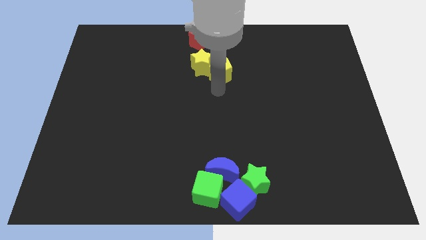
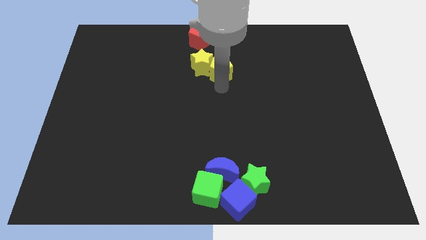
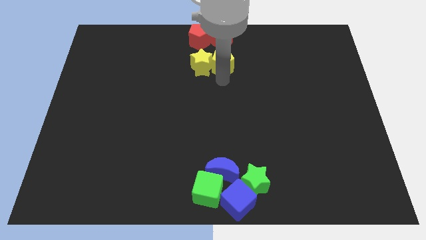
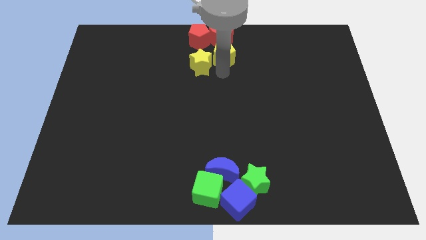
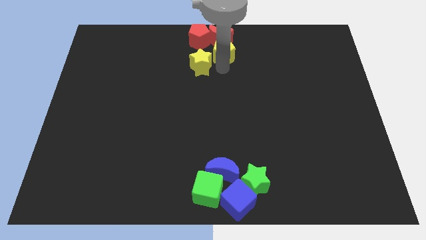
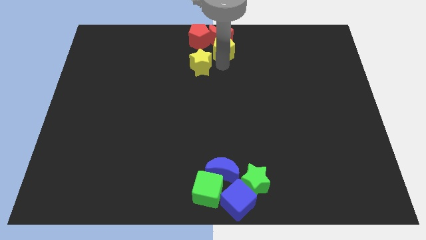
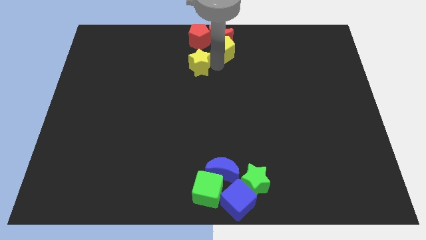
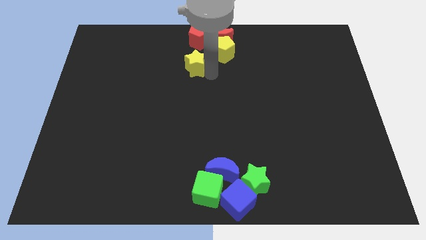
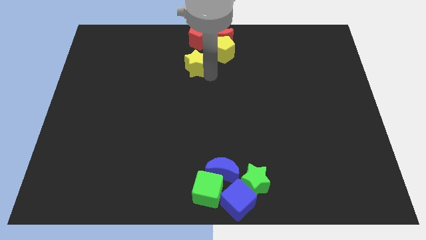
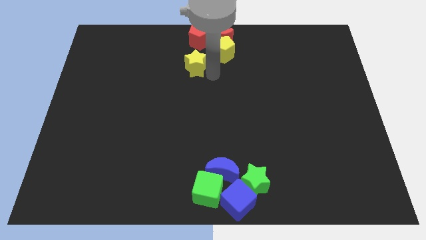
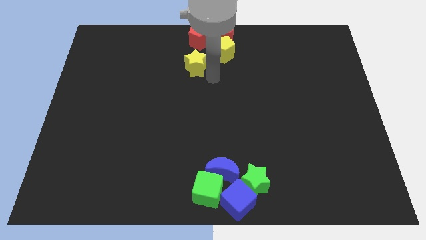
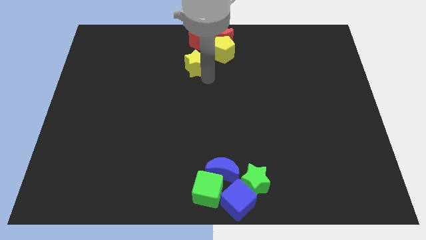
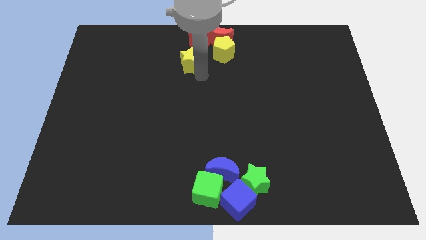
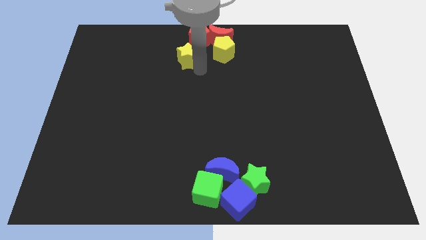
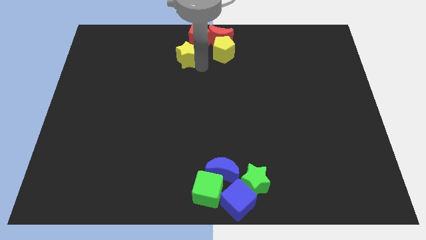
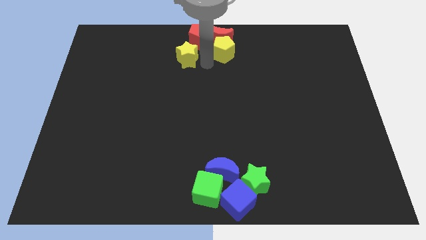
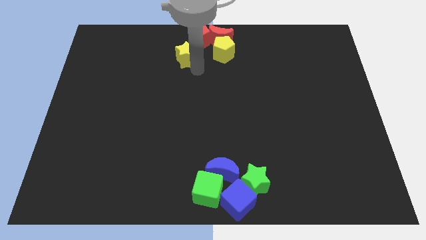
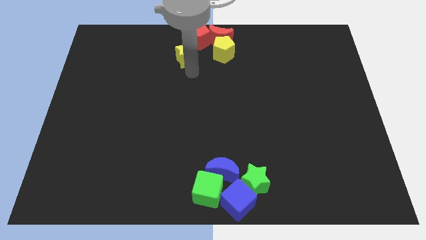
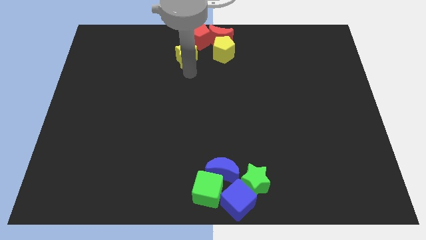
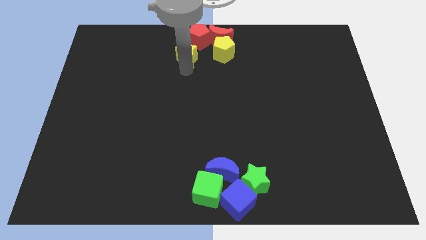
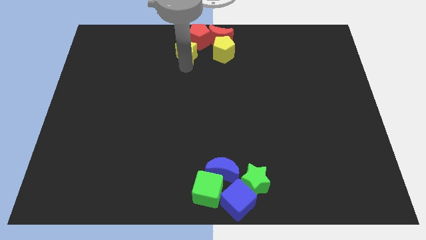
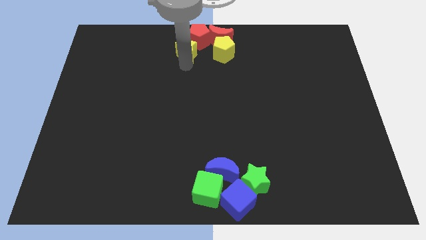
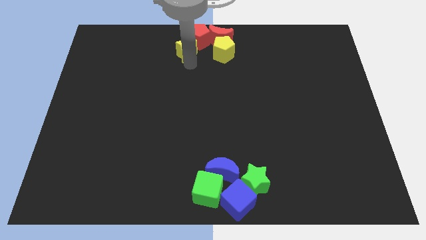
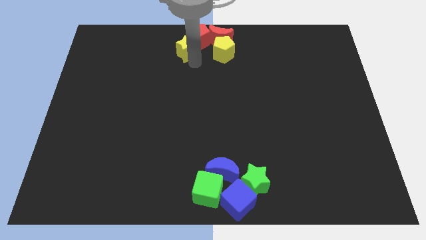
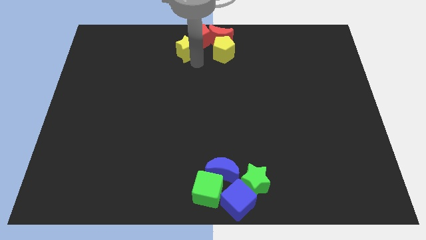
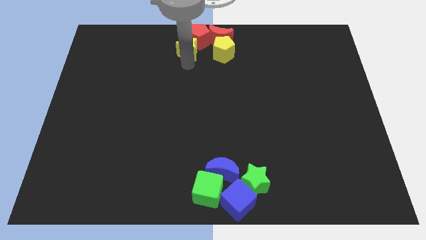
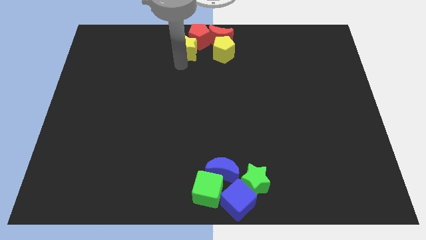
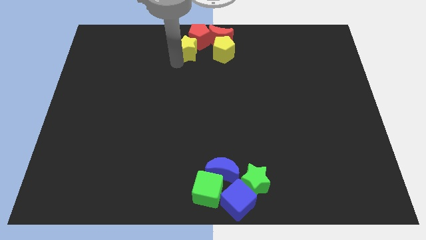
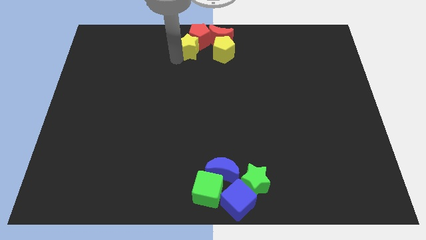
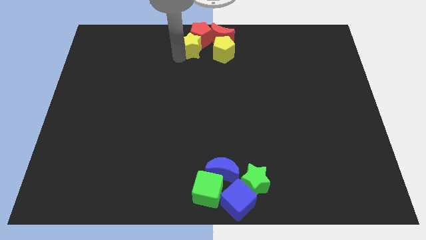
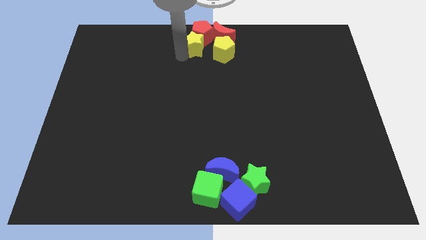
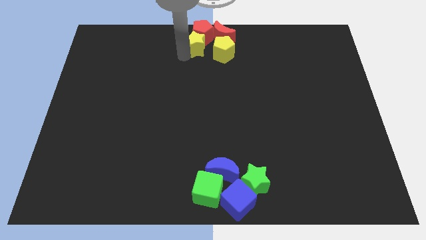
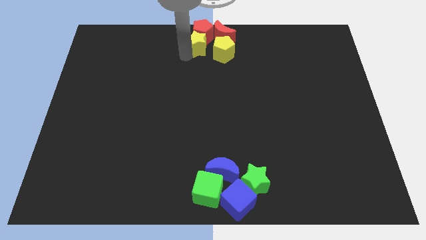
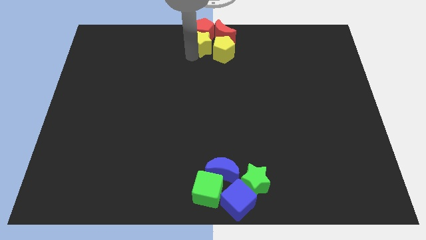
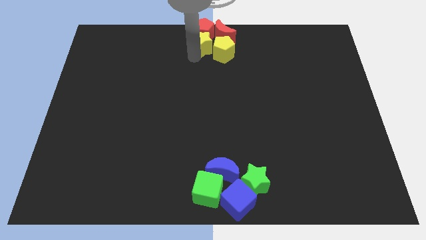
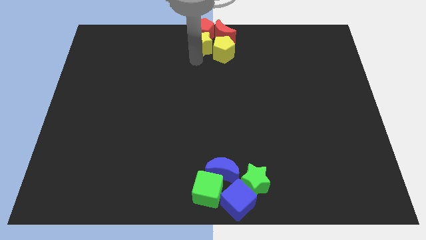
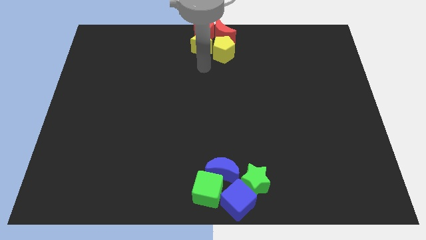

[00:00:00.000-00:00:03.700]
move the yellow blocks down to the red blocks

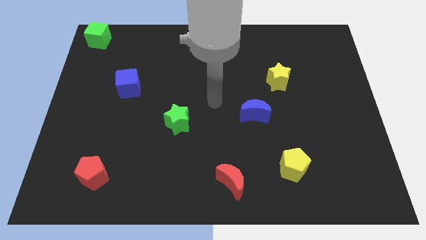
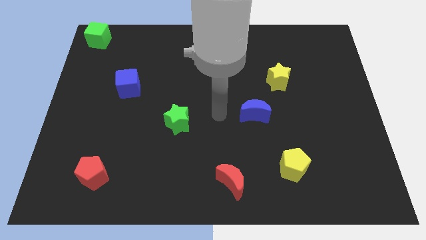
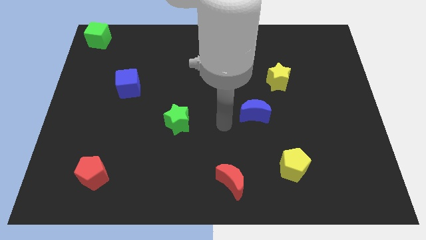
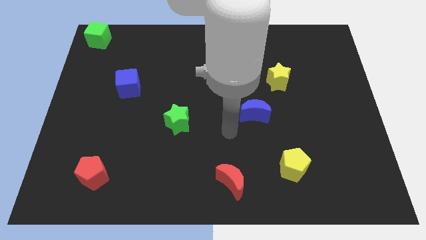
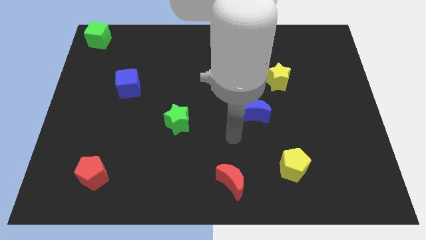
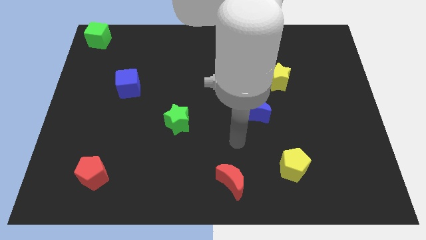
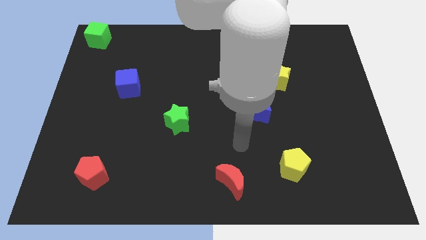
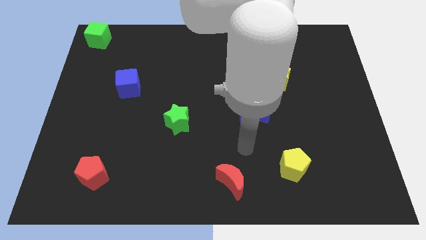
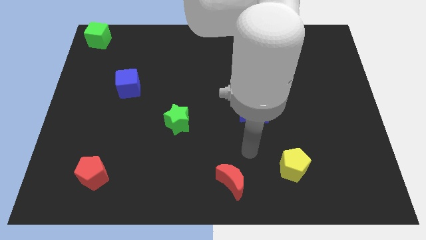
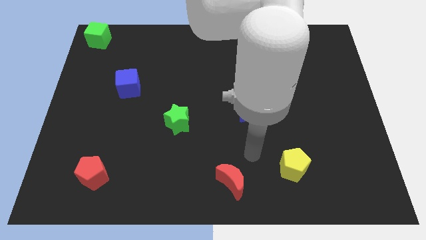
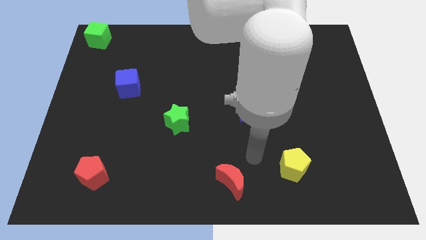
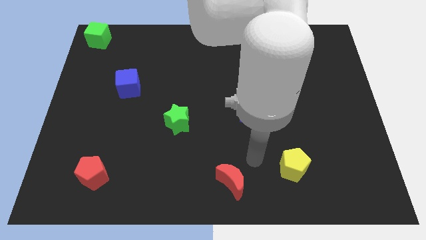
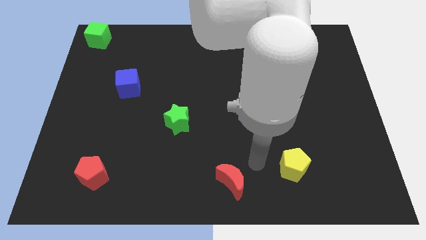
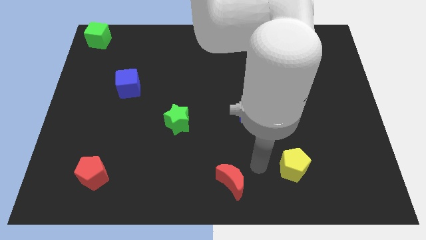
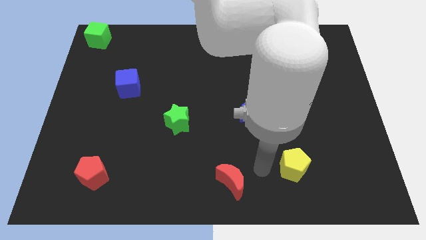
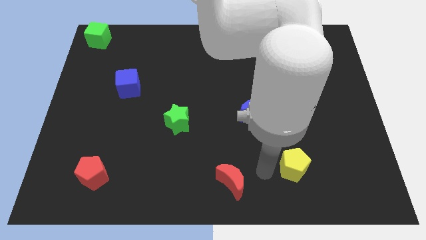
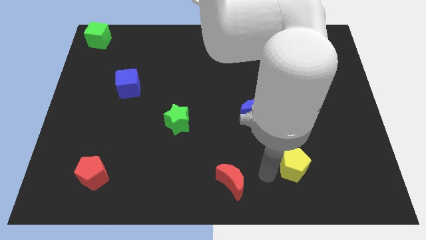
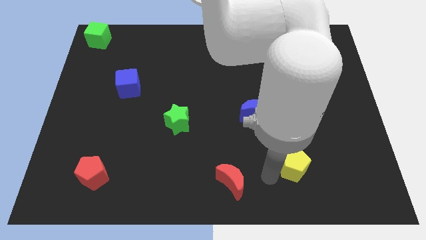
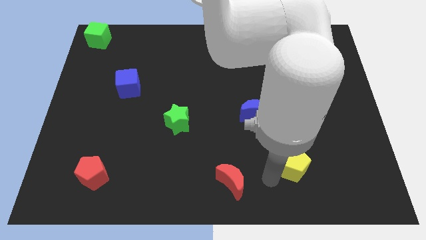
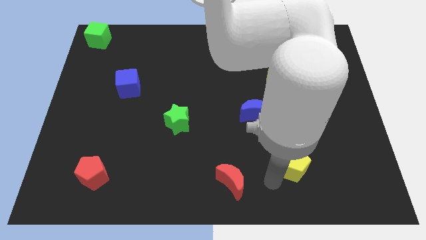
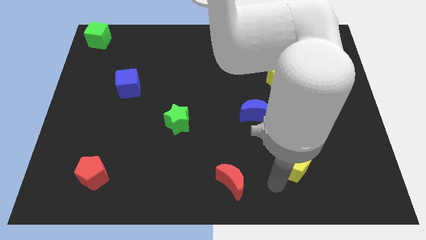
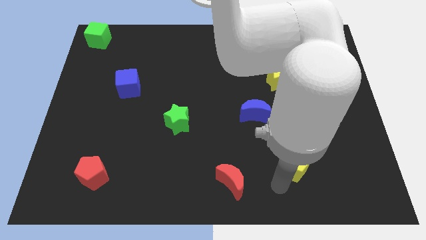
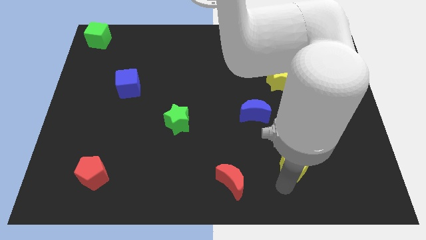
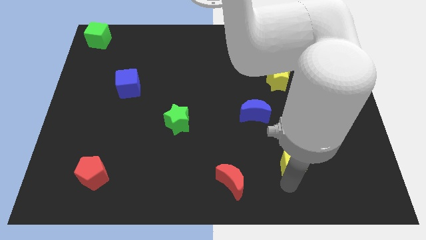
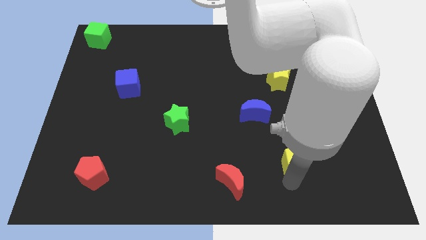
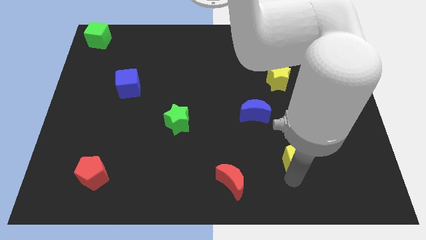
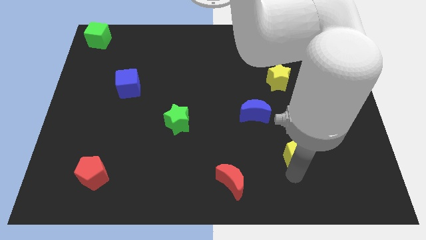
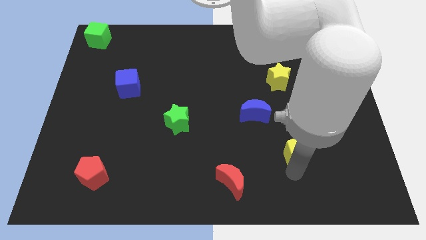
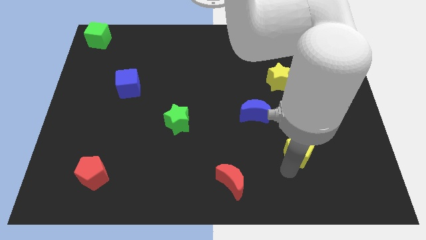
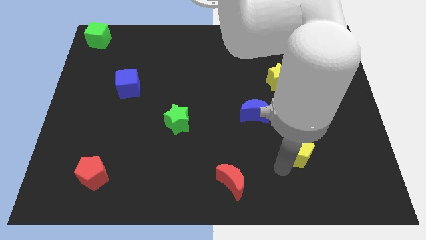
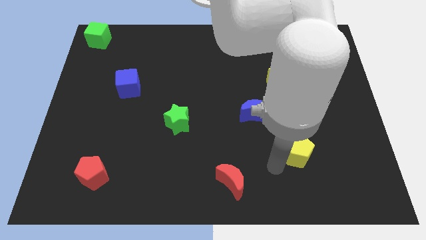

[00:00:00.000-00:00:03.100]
drag yellow pentagon slightly up

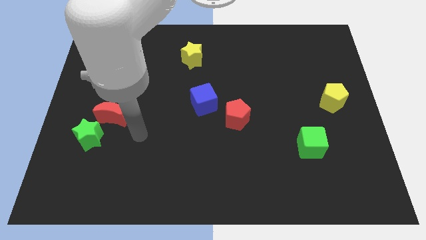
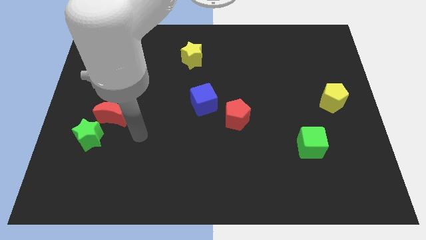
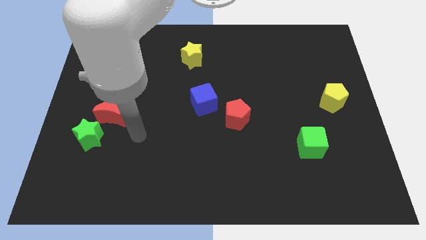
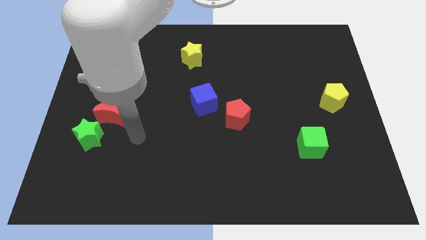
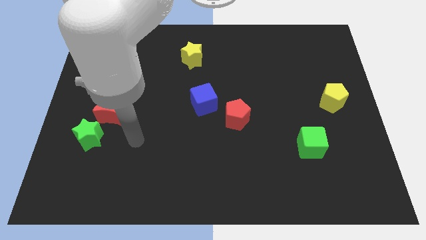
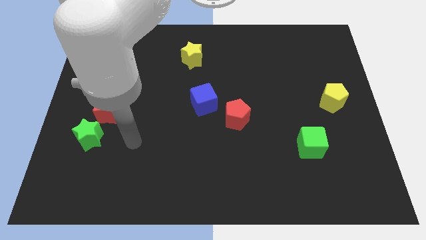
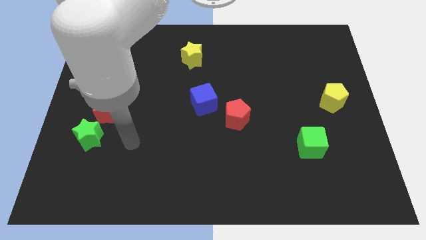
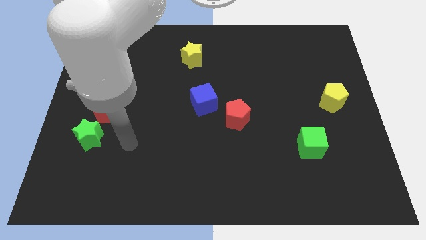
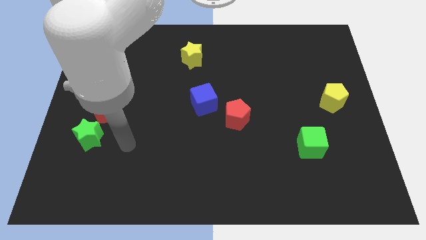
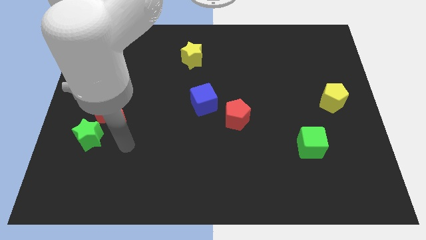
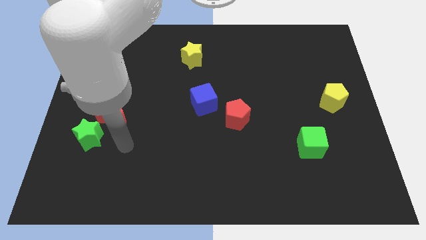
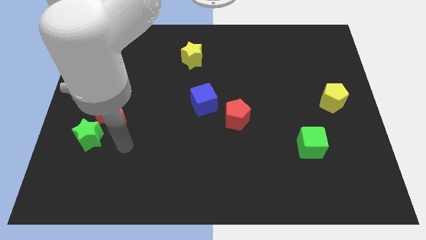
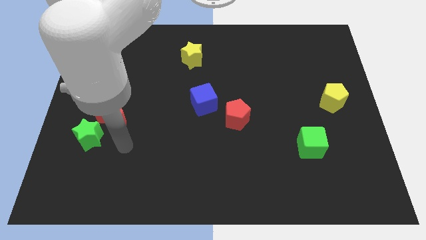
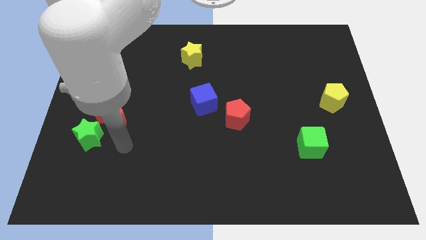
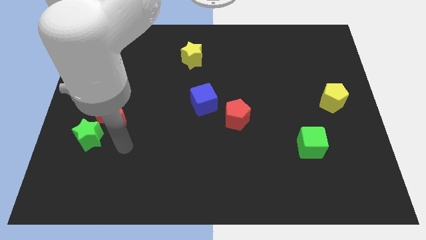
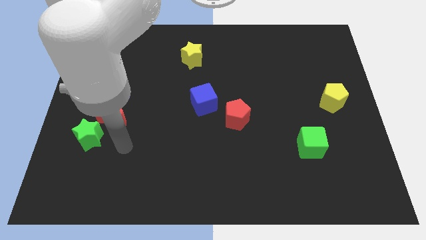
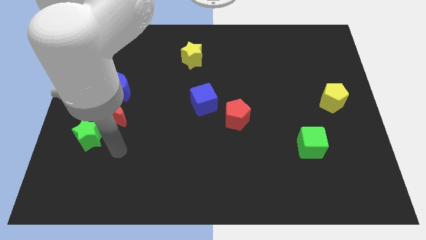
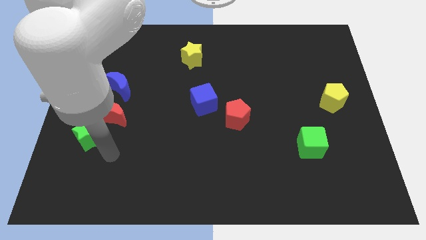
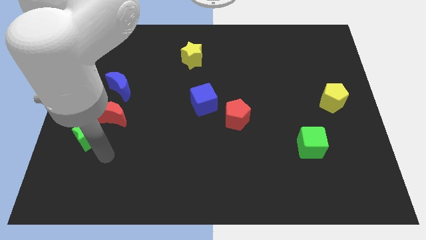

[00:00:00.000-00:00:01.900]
move your arm towards green star

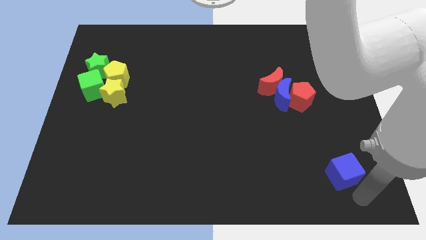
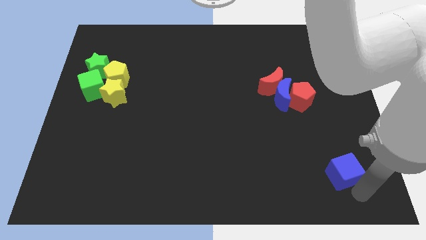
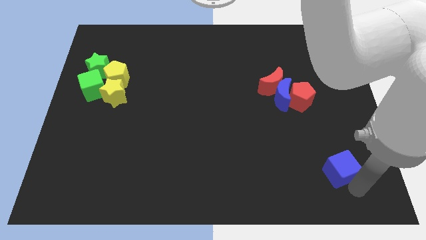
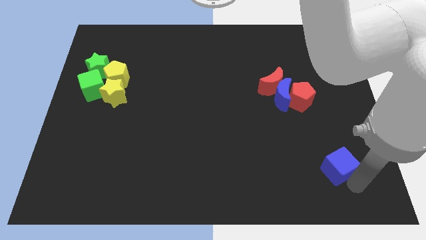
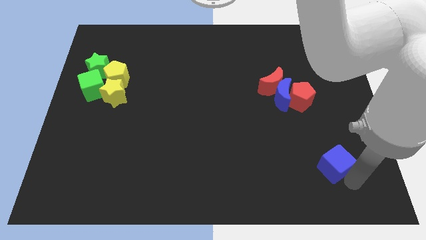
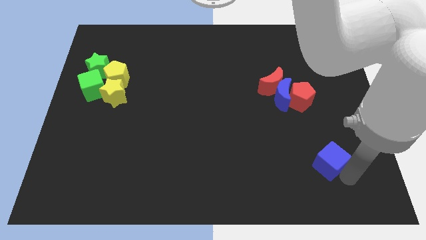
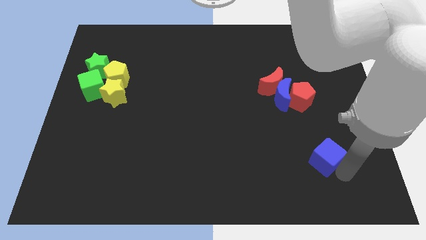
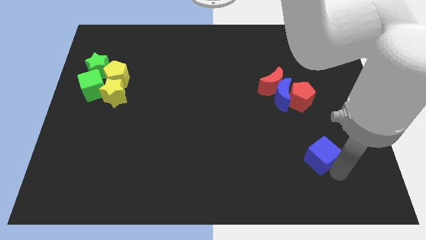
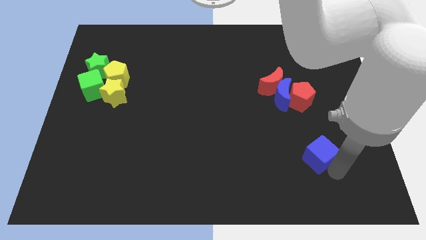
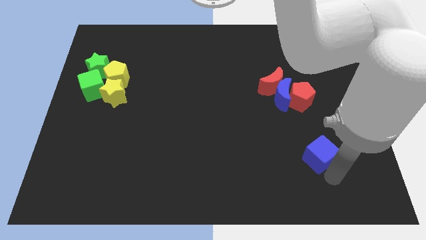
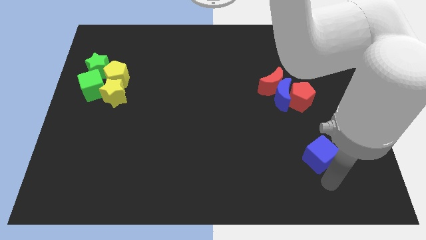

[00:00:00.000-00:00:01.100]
place the blue cube vertically below the red pentagon
